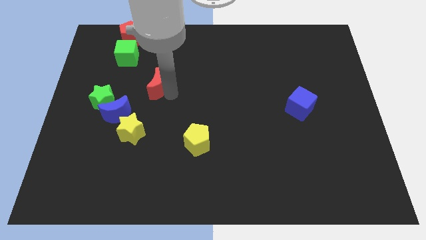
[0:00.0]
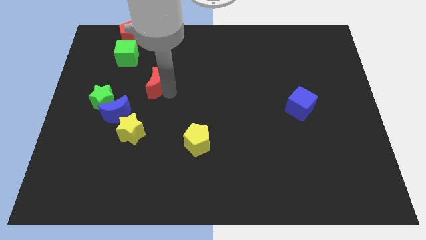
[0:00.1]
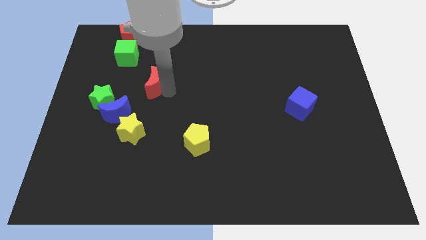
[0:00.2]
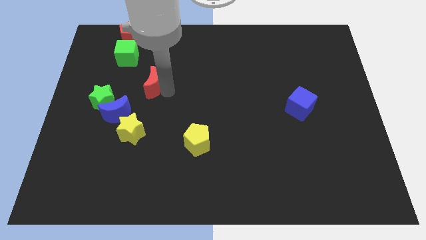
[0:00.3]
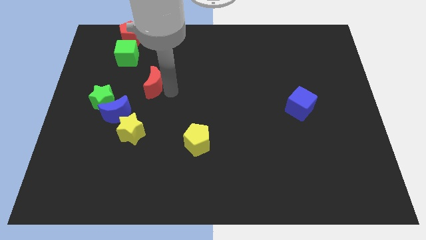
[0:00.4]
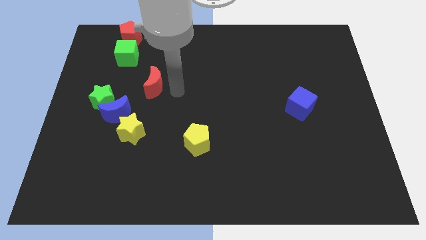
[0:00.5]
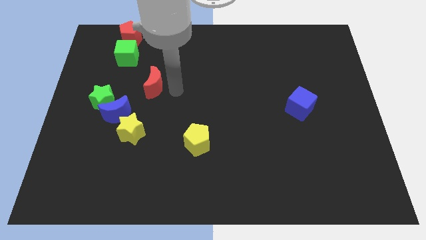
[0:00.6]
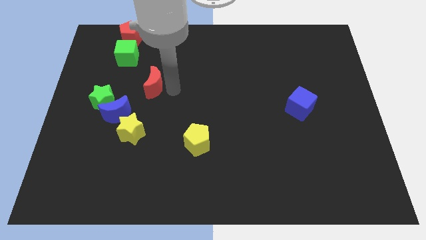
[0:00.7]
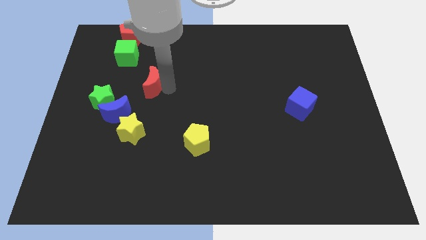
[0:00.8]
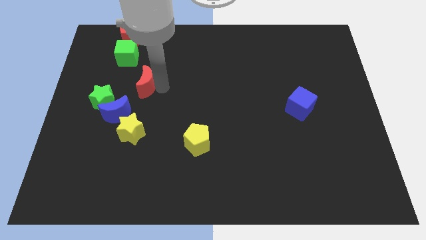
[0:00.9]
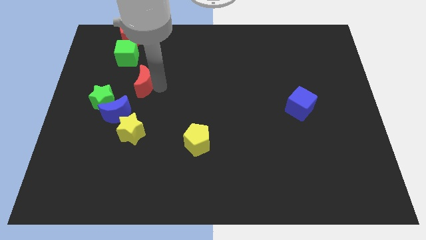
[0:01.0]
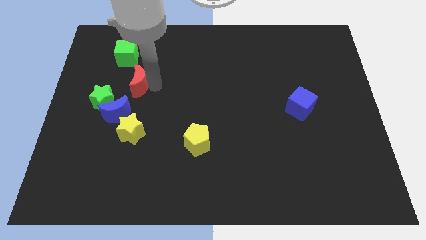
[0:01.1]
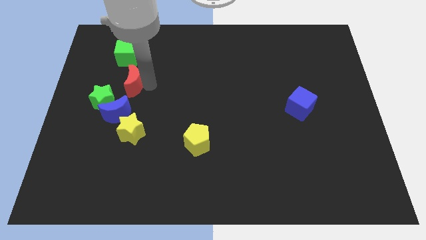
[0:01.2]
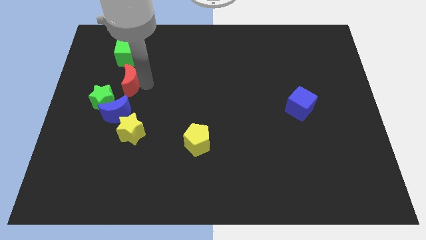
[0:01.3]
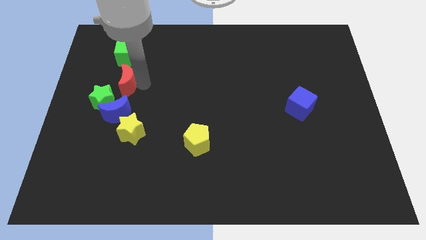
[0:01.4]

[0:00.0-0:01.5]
move the red crescent below the green cube

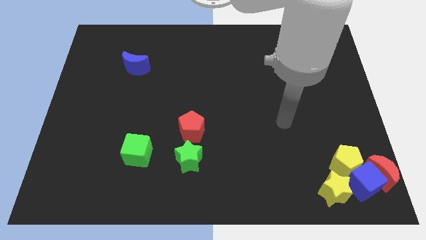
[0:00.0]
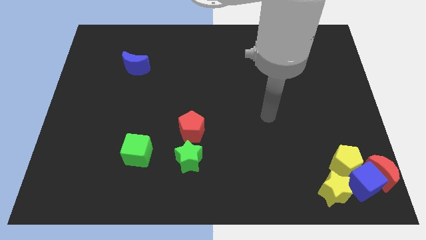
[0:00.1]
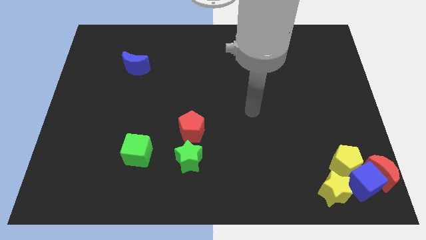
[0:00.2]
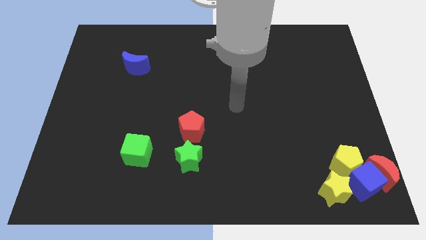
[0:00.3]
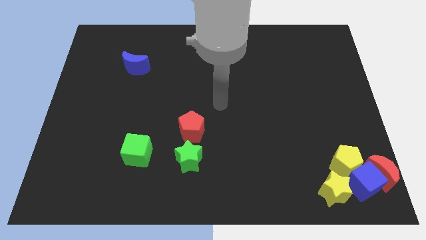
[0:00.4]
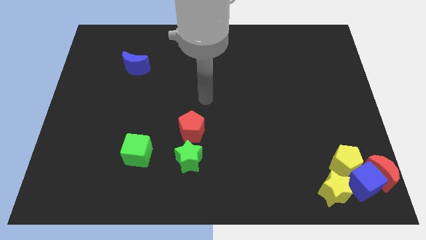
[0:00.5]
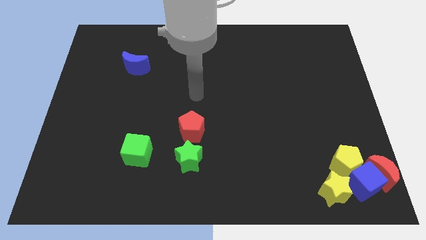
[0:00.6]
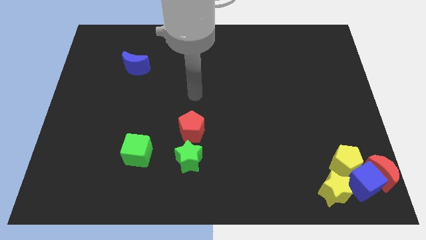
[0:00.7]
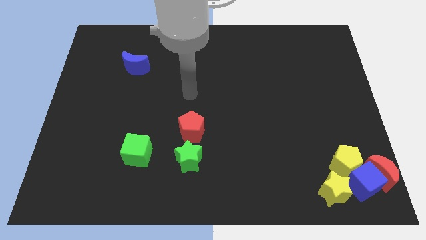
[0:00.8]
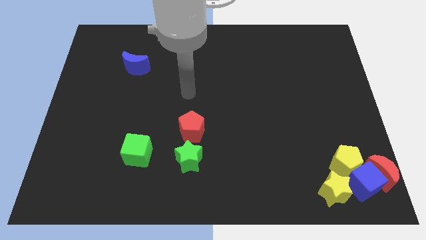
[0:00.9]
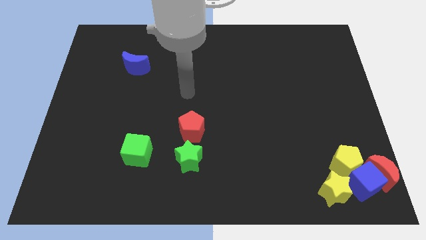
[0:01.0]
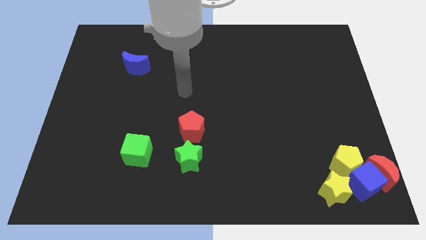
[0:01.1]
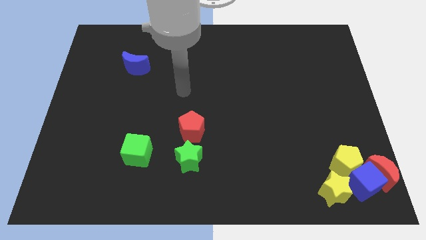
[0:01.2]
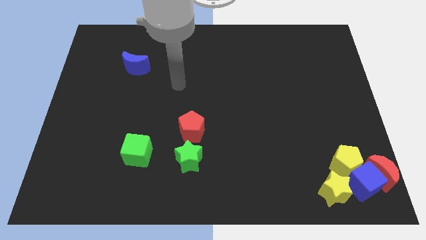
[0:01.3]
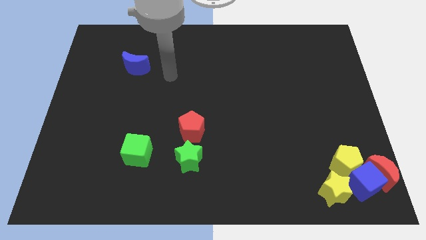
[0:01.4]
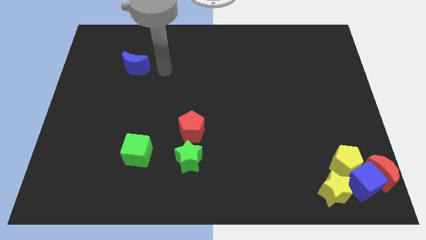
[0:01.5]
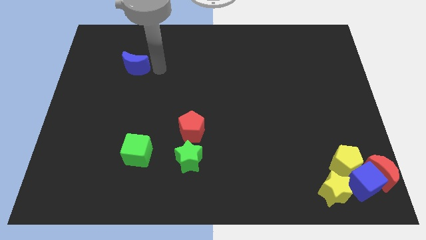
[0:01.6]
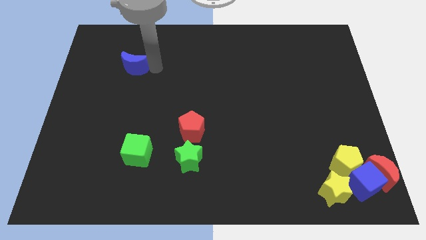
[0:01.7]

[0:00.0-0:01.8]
touch the right side of the blue moon

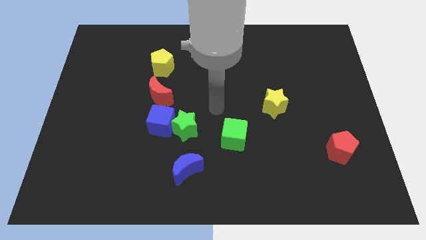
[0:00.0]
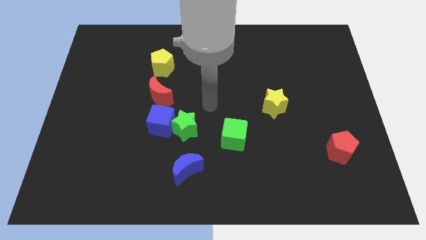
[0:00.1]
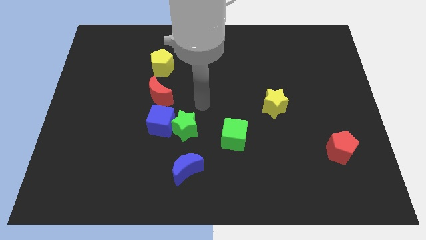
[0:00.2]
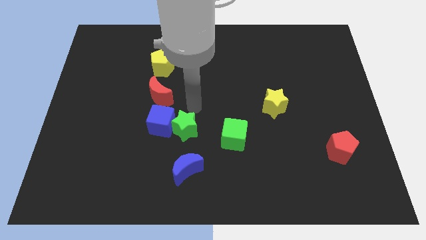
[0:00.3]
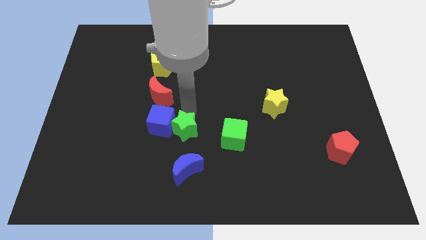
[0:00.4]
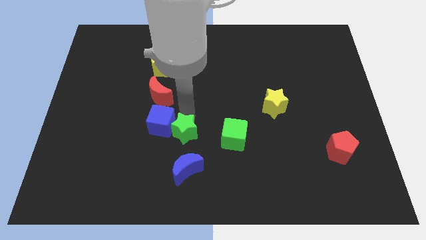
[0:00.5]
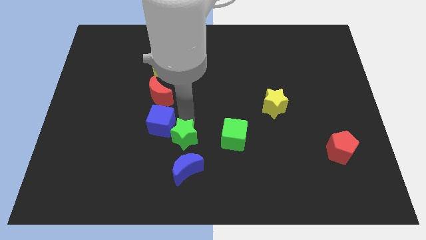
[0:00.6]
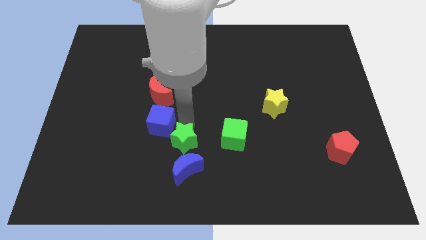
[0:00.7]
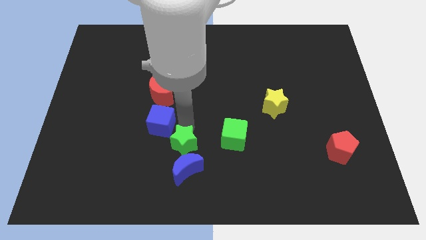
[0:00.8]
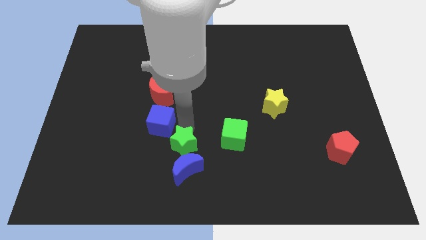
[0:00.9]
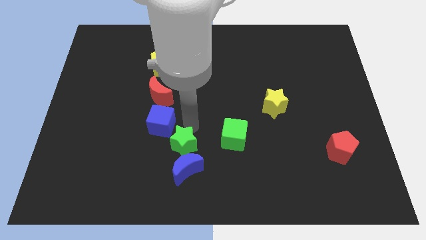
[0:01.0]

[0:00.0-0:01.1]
move the green star into the blue crescent

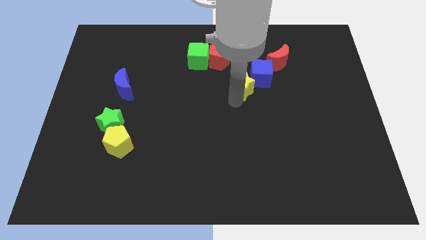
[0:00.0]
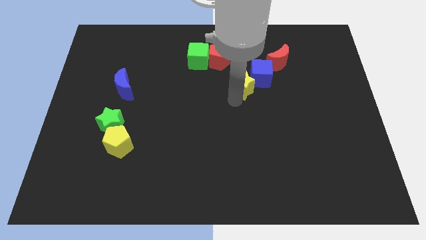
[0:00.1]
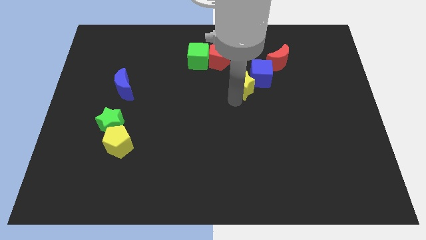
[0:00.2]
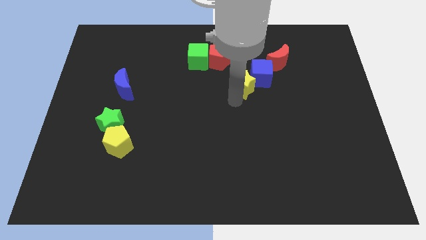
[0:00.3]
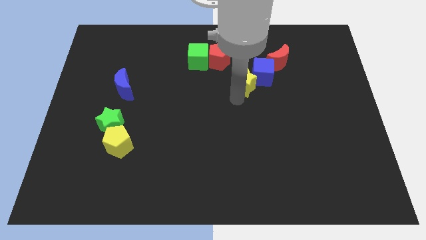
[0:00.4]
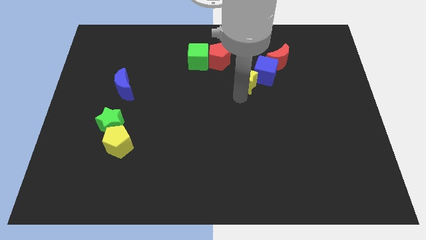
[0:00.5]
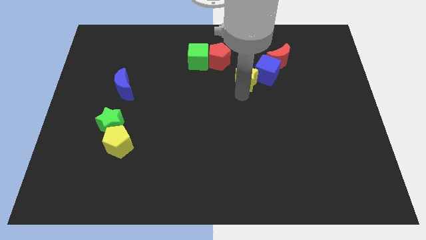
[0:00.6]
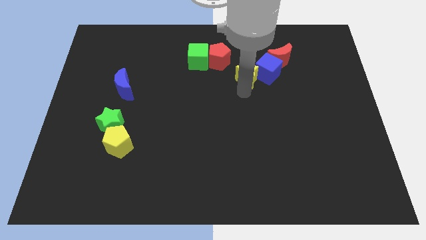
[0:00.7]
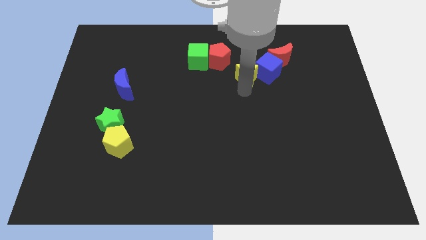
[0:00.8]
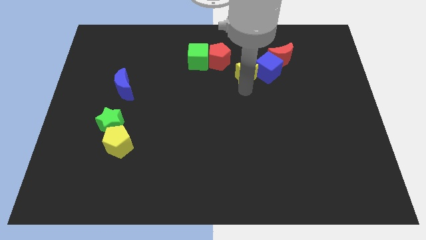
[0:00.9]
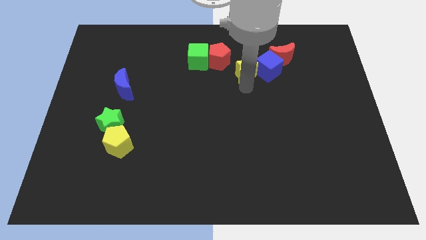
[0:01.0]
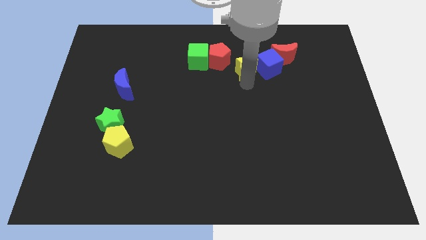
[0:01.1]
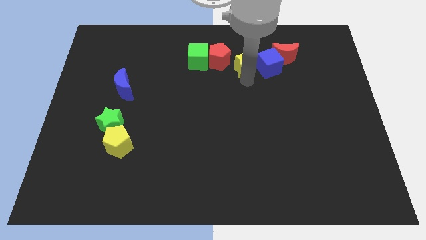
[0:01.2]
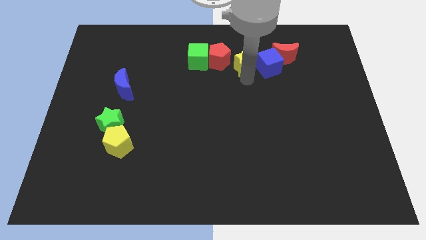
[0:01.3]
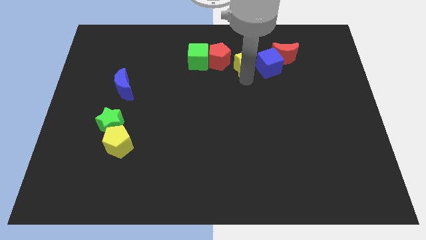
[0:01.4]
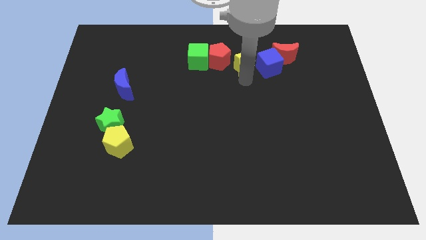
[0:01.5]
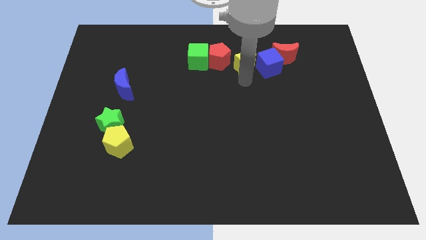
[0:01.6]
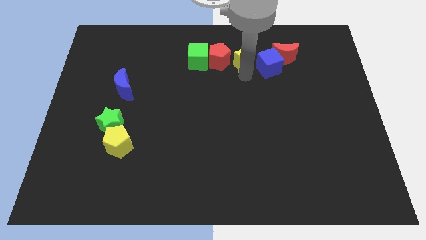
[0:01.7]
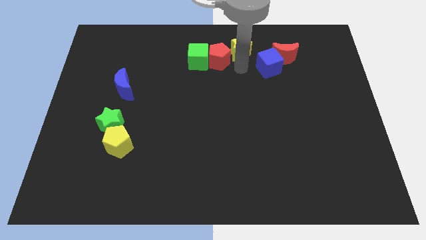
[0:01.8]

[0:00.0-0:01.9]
place yellow star to the left of the blue cube

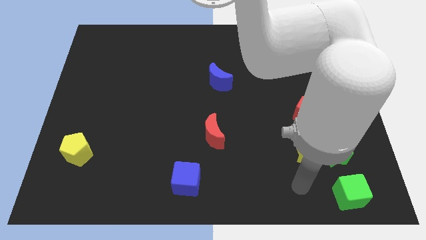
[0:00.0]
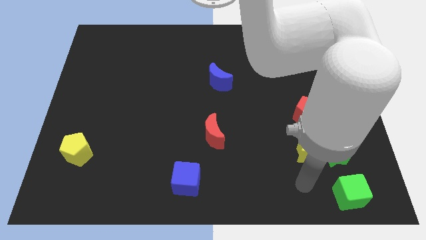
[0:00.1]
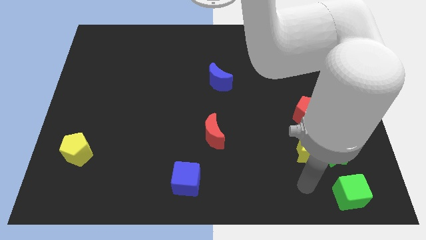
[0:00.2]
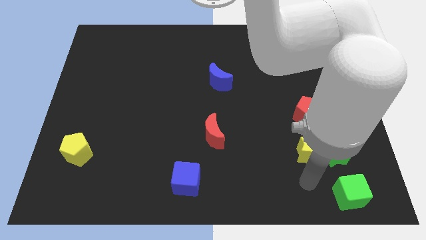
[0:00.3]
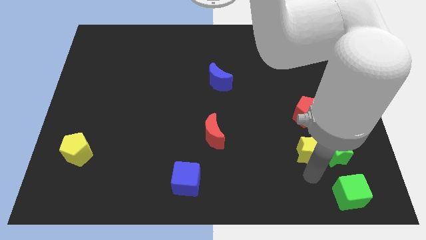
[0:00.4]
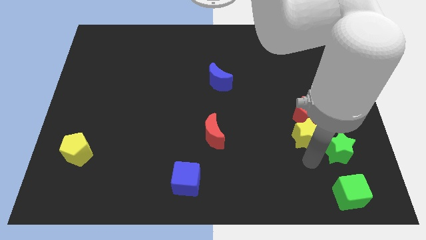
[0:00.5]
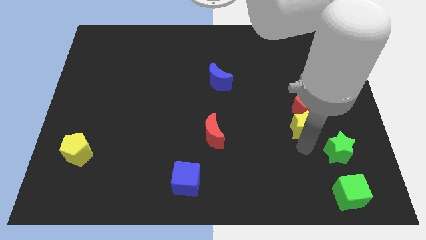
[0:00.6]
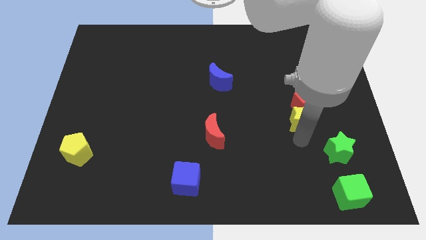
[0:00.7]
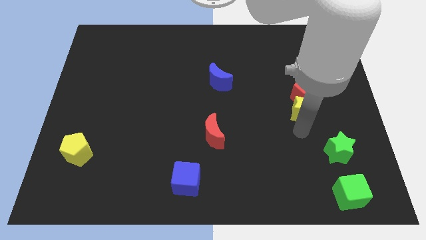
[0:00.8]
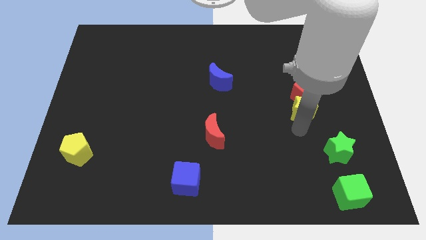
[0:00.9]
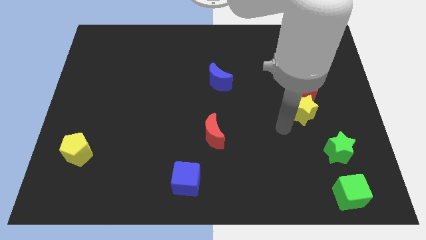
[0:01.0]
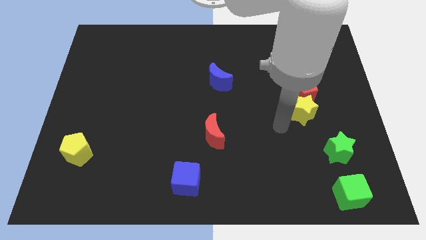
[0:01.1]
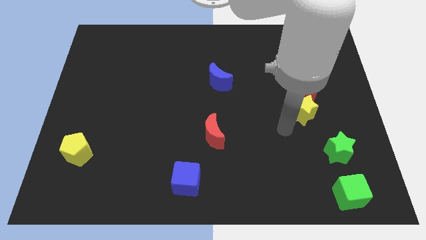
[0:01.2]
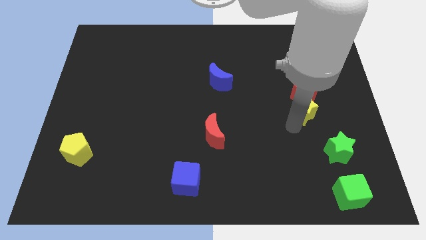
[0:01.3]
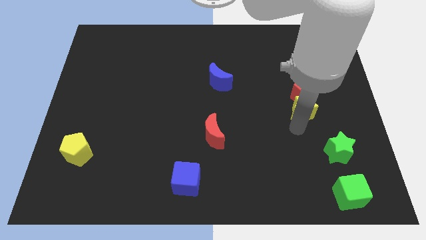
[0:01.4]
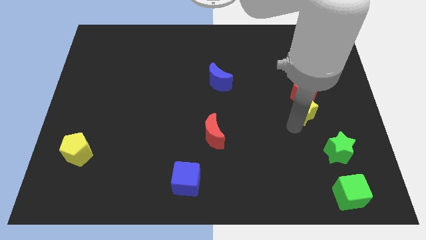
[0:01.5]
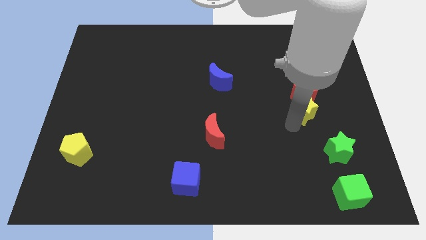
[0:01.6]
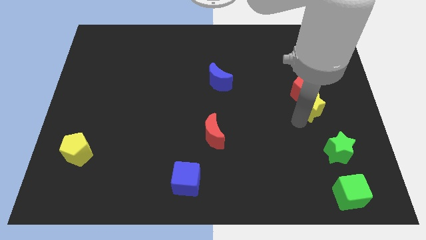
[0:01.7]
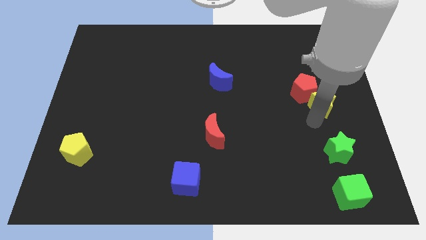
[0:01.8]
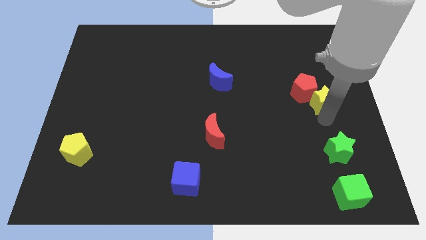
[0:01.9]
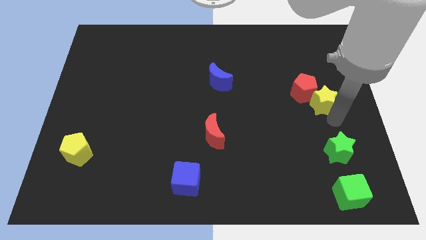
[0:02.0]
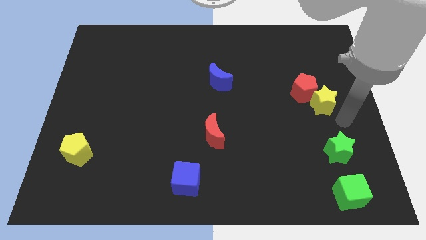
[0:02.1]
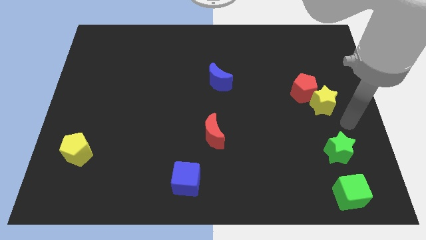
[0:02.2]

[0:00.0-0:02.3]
push the yellow star to the top of the green star

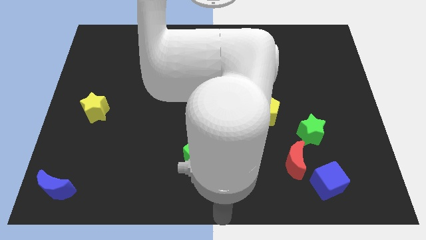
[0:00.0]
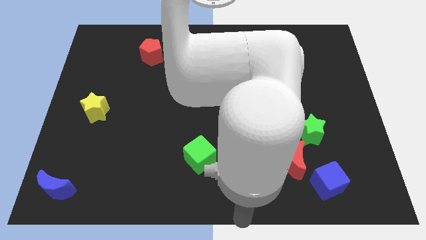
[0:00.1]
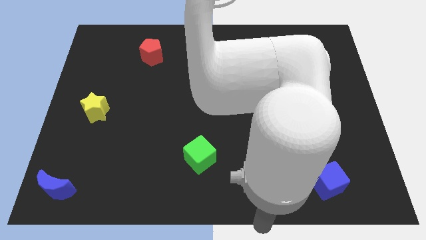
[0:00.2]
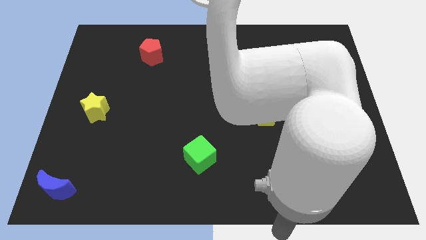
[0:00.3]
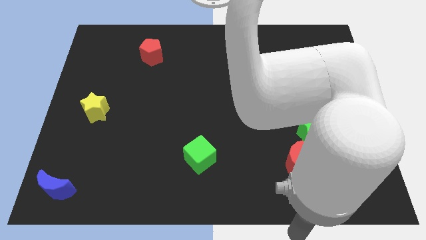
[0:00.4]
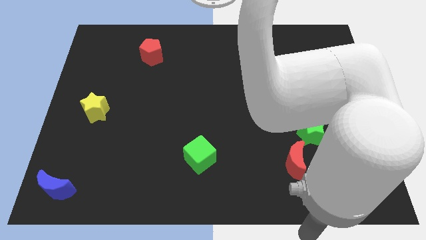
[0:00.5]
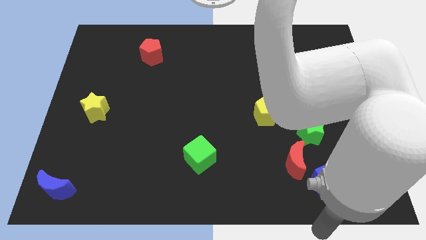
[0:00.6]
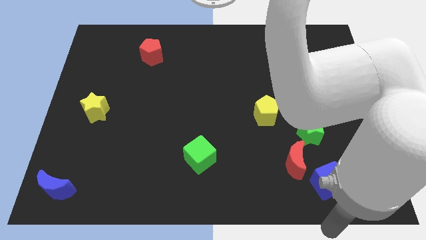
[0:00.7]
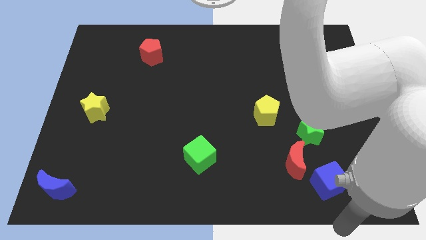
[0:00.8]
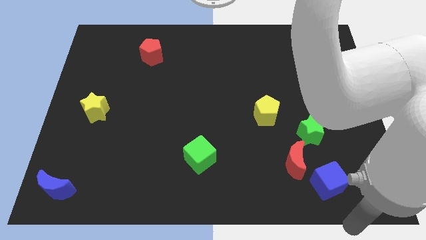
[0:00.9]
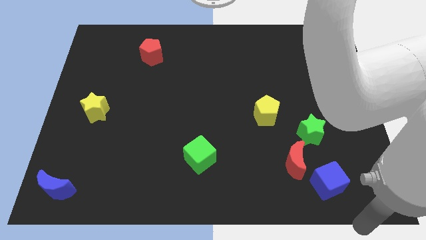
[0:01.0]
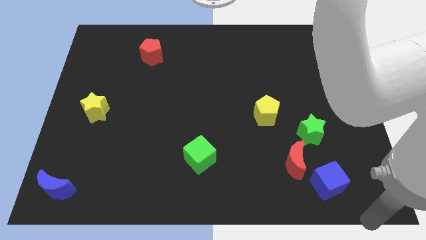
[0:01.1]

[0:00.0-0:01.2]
move your arm towards the bottom right corner of the board
